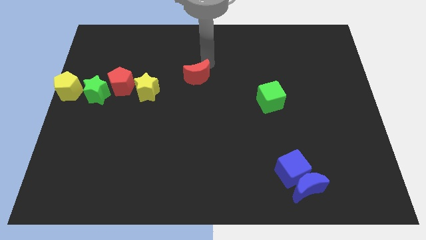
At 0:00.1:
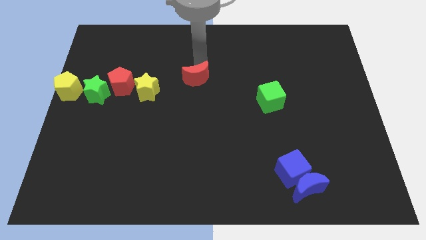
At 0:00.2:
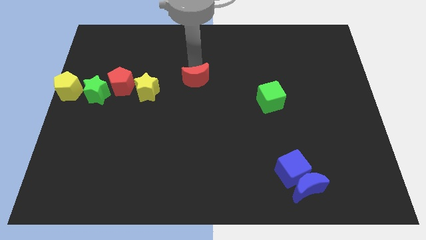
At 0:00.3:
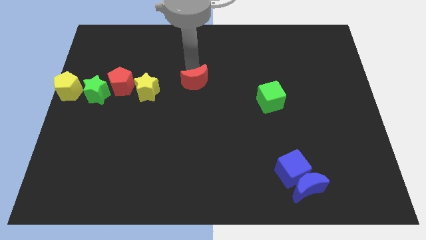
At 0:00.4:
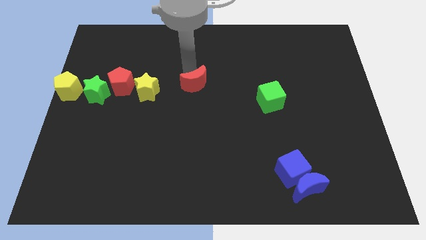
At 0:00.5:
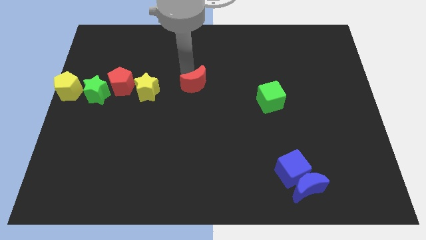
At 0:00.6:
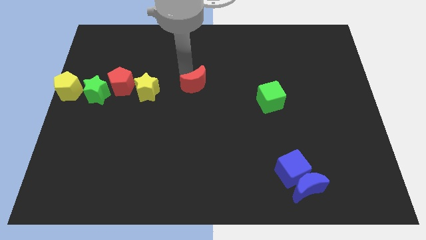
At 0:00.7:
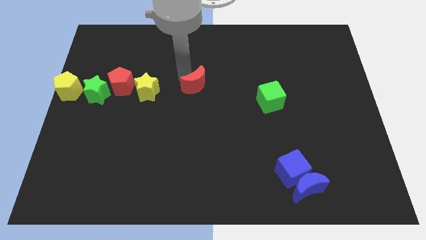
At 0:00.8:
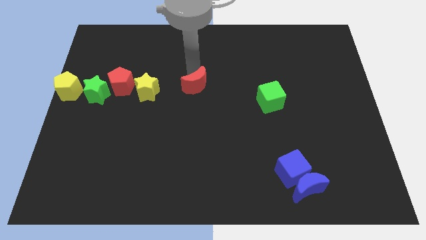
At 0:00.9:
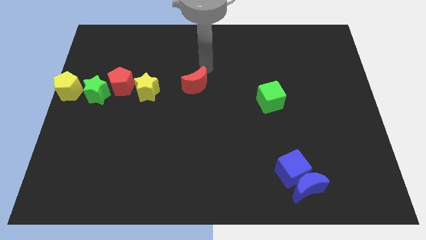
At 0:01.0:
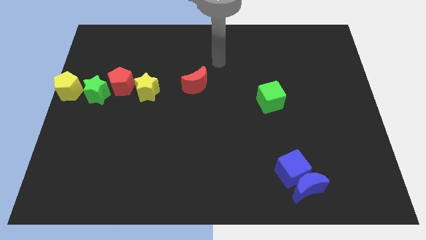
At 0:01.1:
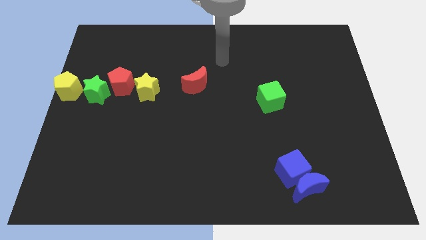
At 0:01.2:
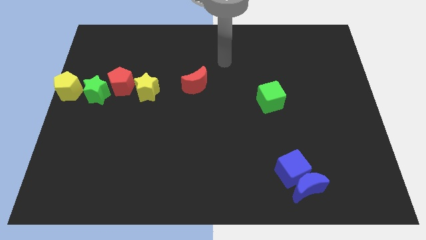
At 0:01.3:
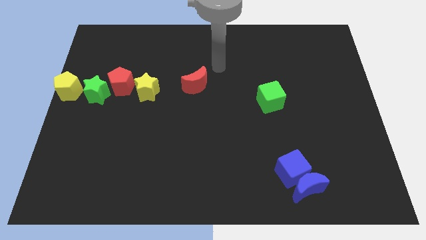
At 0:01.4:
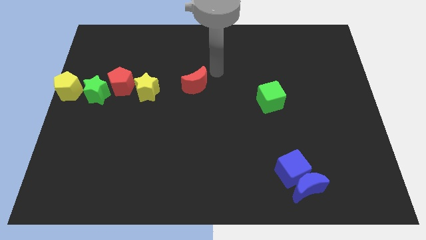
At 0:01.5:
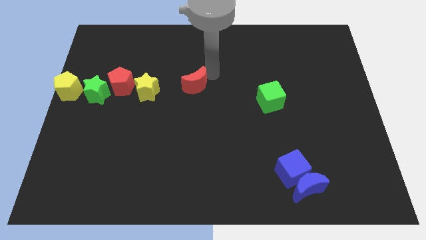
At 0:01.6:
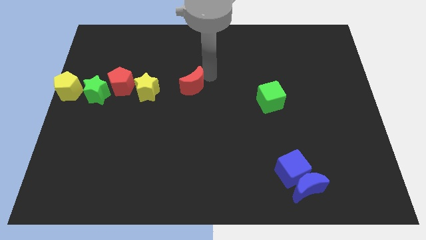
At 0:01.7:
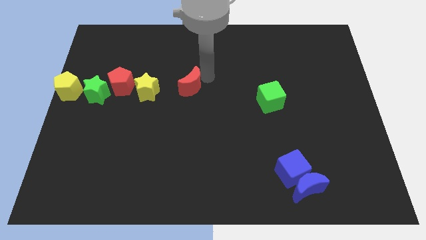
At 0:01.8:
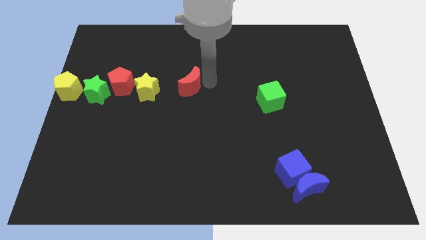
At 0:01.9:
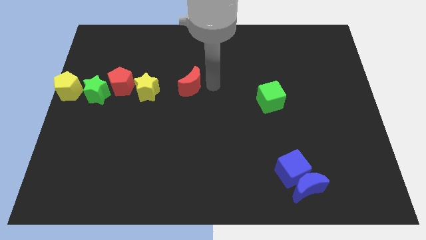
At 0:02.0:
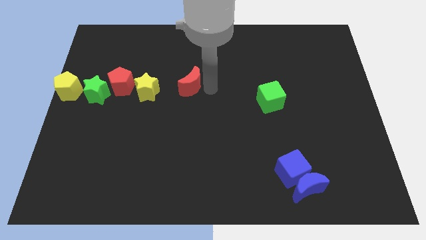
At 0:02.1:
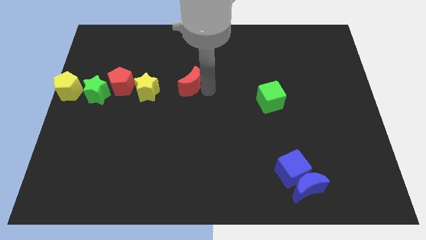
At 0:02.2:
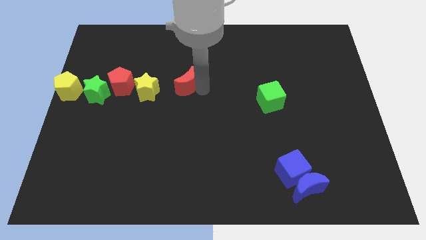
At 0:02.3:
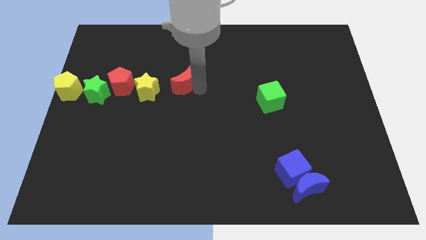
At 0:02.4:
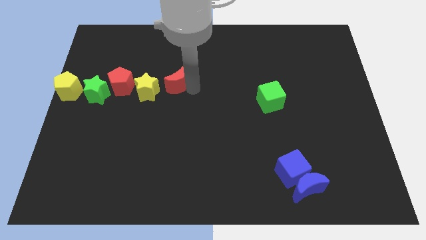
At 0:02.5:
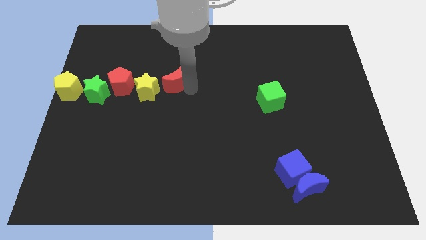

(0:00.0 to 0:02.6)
move the red crescent to the right of the yellow star

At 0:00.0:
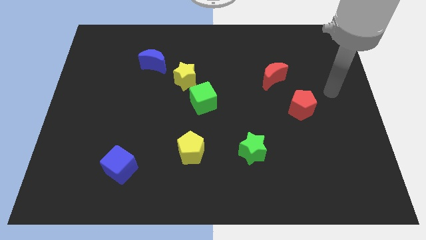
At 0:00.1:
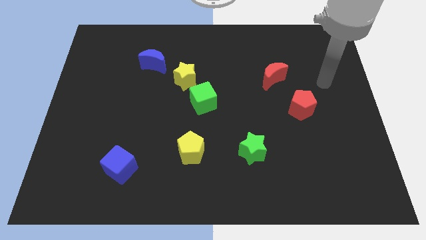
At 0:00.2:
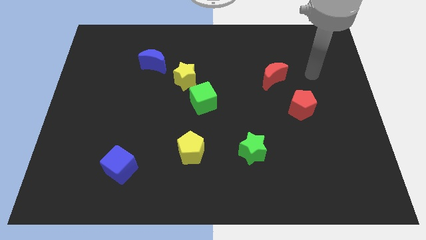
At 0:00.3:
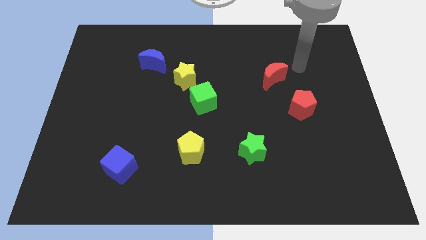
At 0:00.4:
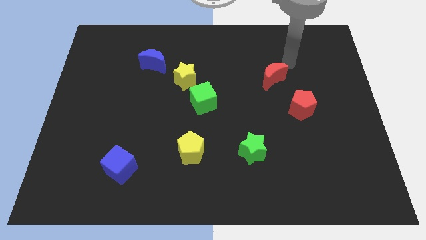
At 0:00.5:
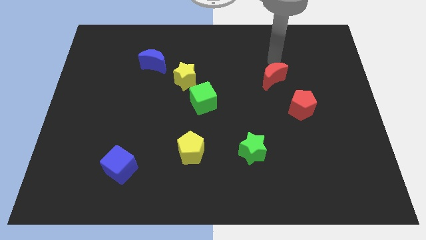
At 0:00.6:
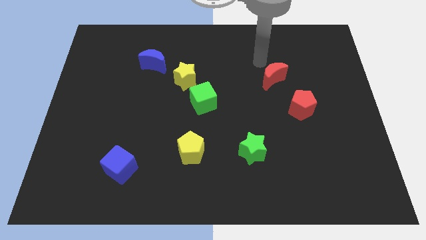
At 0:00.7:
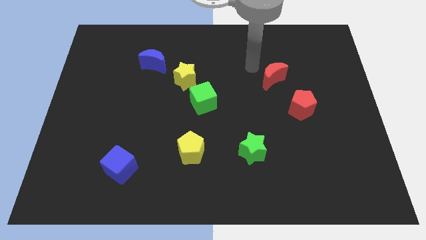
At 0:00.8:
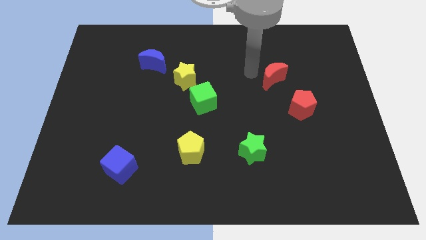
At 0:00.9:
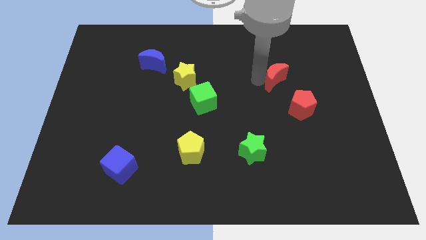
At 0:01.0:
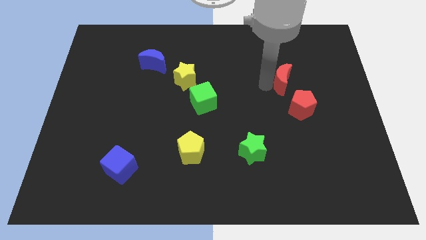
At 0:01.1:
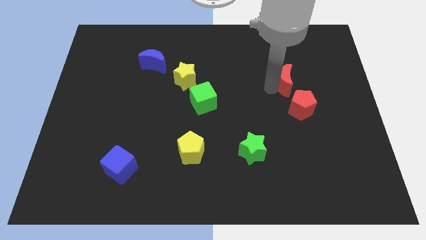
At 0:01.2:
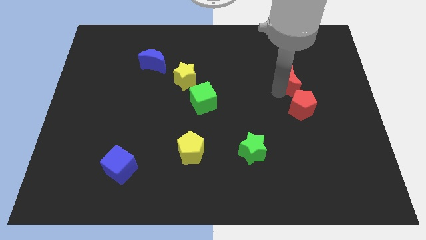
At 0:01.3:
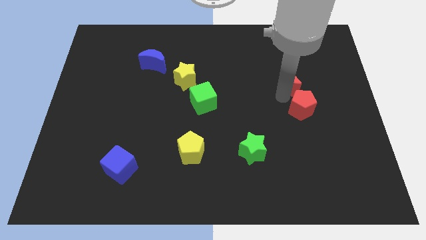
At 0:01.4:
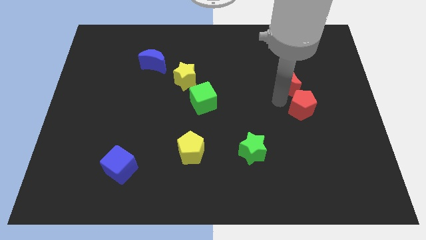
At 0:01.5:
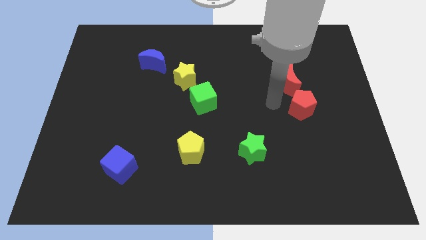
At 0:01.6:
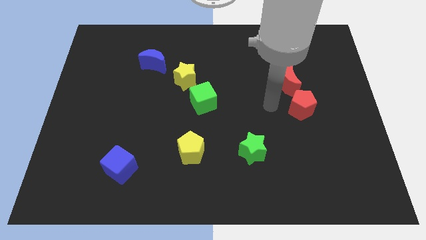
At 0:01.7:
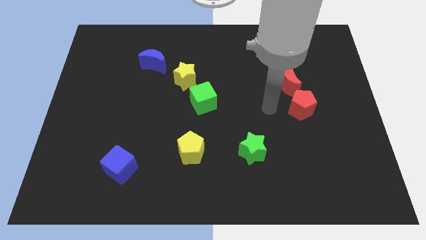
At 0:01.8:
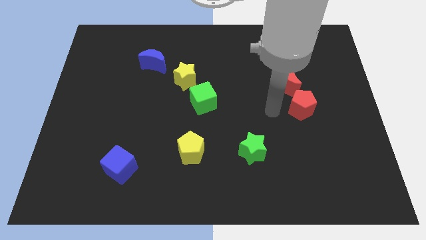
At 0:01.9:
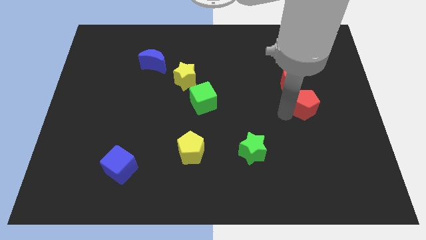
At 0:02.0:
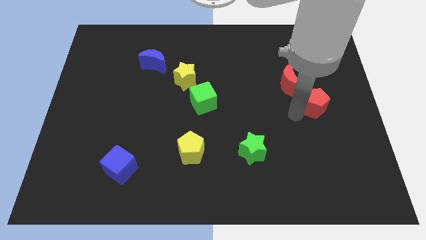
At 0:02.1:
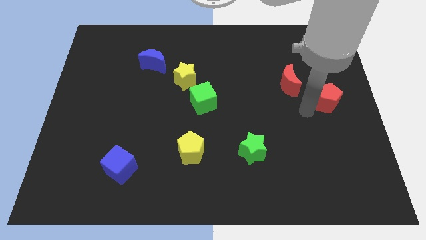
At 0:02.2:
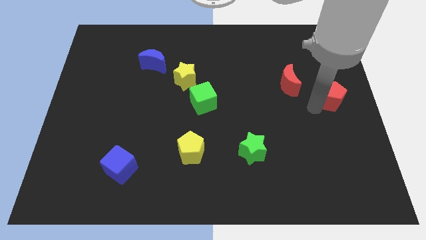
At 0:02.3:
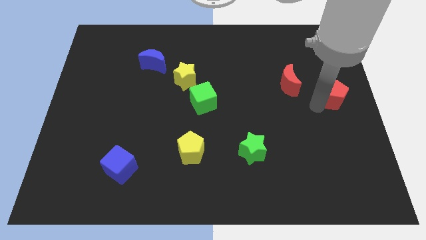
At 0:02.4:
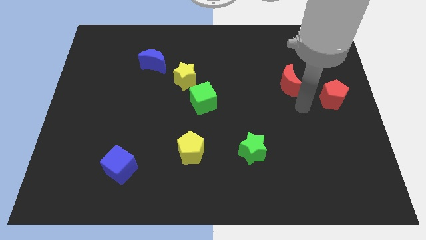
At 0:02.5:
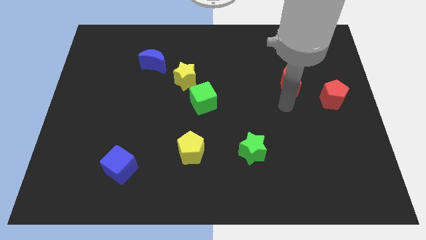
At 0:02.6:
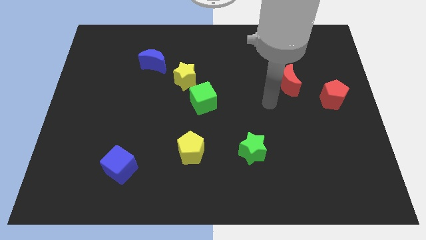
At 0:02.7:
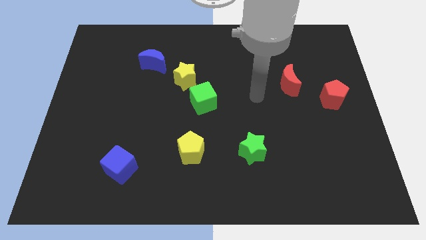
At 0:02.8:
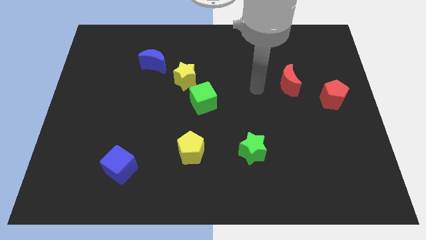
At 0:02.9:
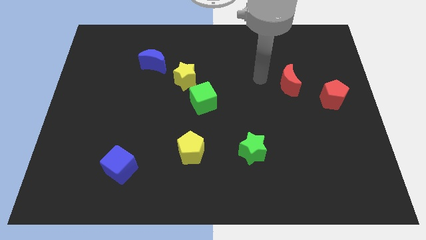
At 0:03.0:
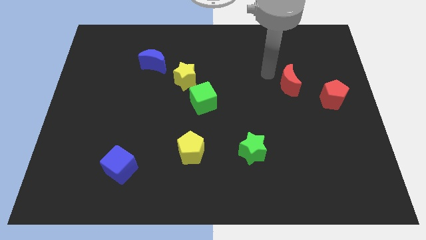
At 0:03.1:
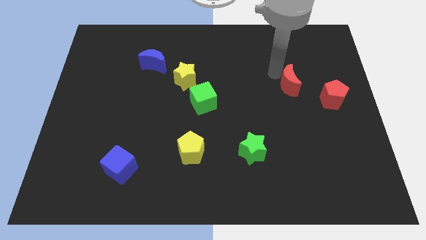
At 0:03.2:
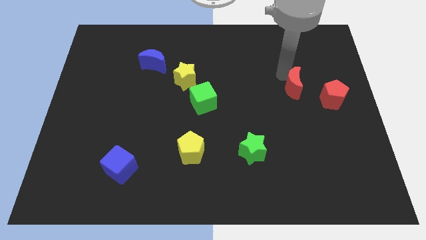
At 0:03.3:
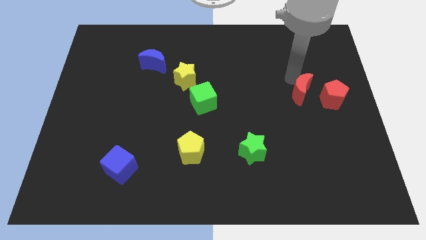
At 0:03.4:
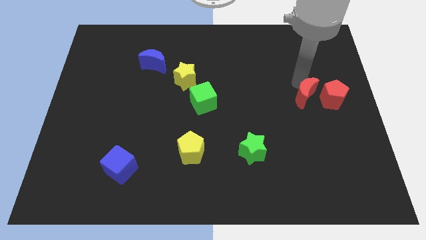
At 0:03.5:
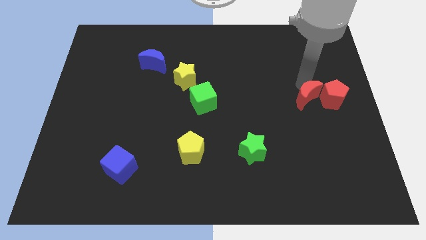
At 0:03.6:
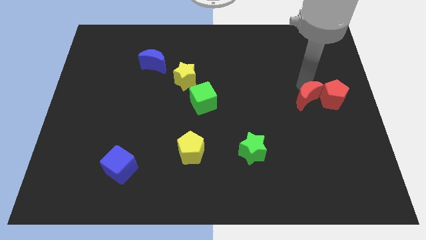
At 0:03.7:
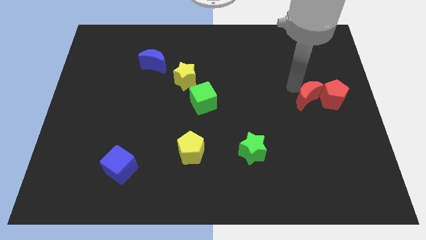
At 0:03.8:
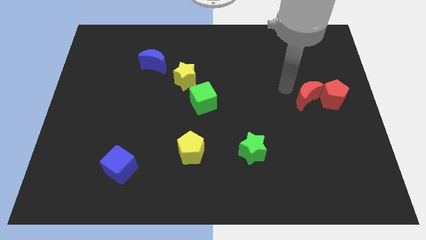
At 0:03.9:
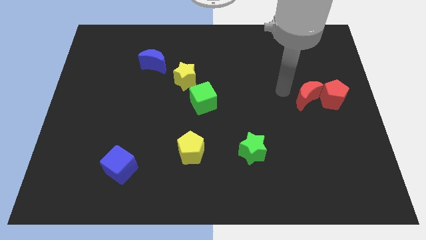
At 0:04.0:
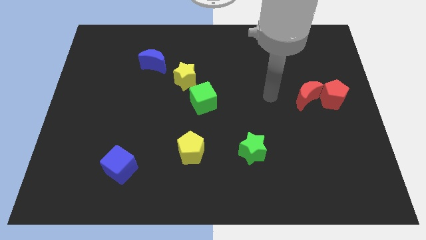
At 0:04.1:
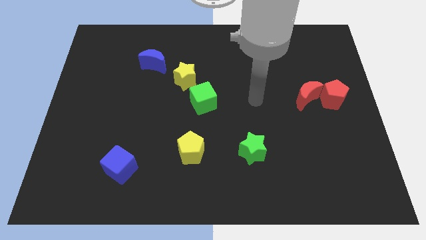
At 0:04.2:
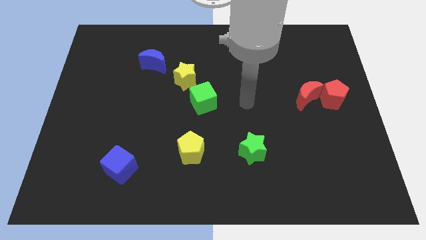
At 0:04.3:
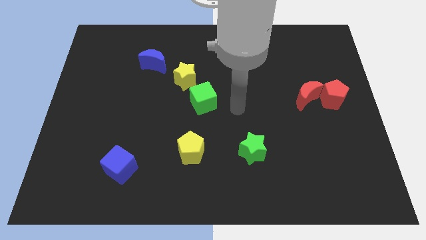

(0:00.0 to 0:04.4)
place the red blocks together at the center right

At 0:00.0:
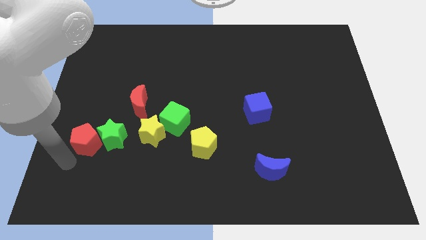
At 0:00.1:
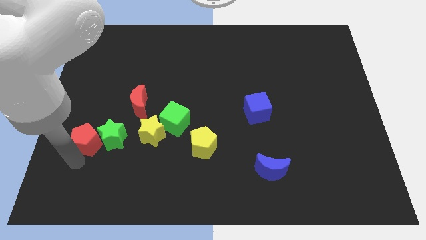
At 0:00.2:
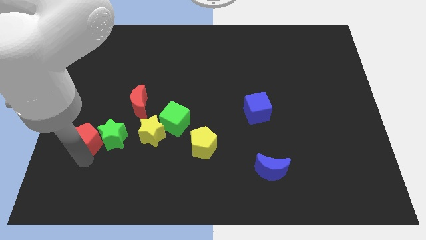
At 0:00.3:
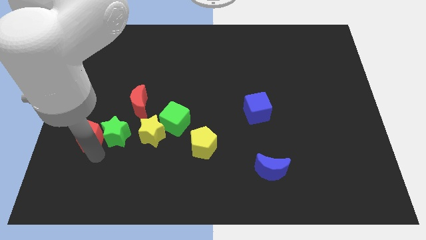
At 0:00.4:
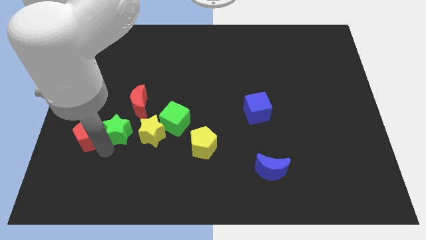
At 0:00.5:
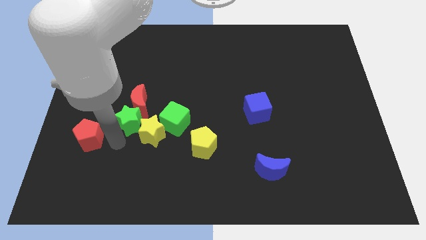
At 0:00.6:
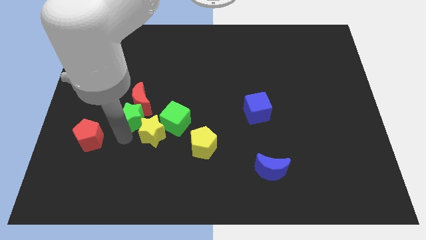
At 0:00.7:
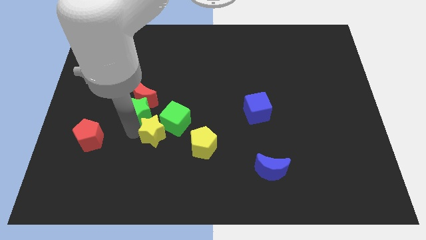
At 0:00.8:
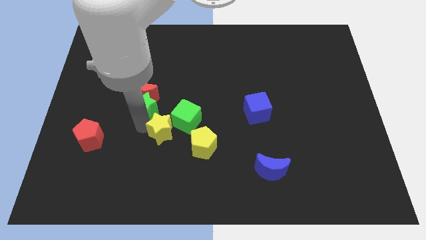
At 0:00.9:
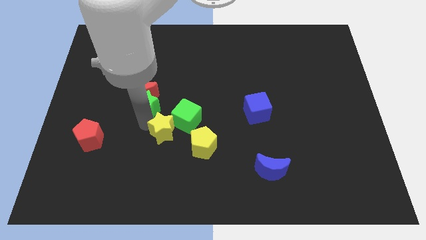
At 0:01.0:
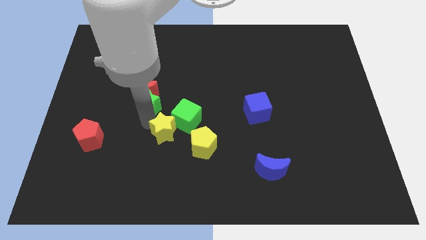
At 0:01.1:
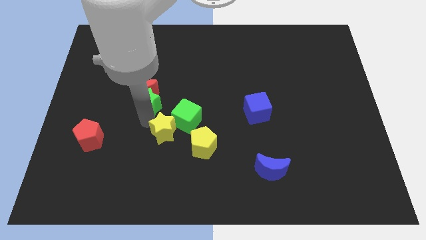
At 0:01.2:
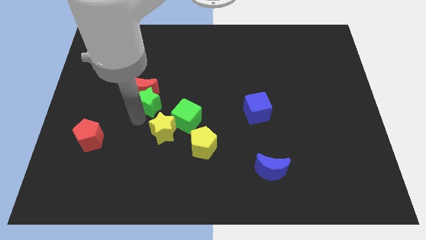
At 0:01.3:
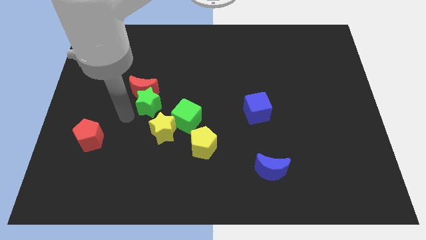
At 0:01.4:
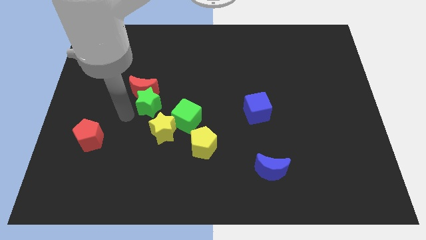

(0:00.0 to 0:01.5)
push the green star into the red crescent

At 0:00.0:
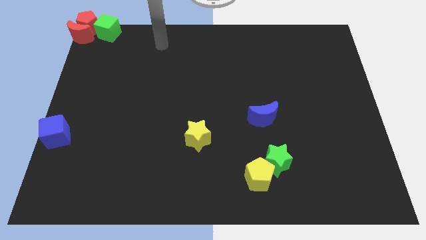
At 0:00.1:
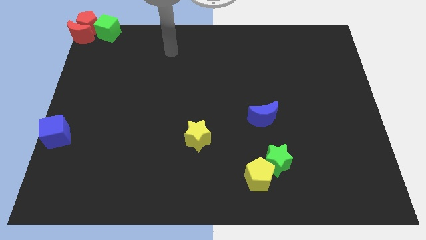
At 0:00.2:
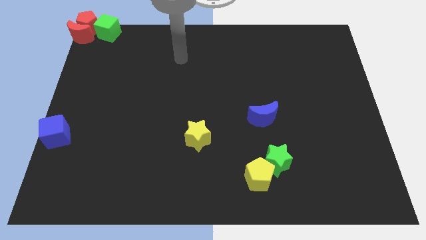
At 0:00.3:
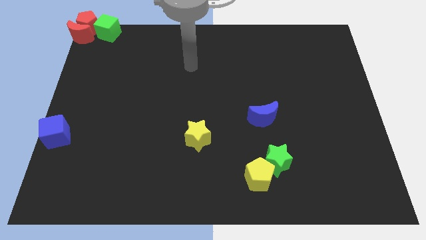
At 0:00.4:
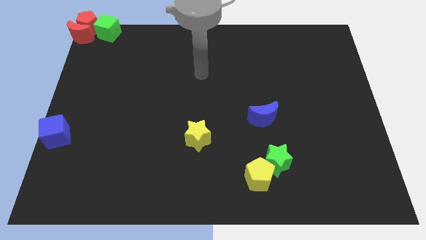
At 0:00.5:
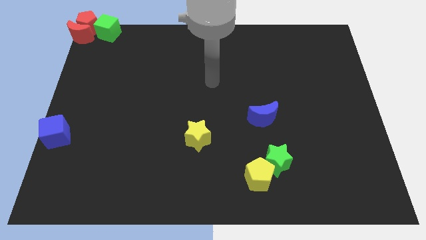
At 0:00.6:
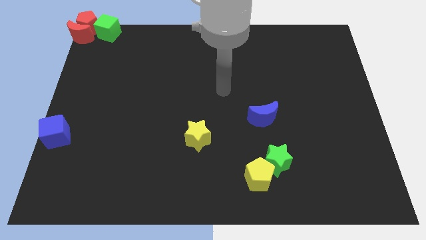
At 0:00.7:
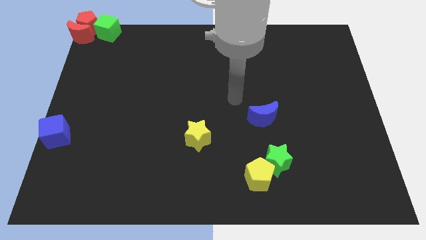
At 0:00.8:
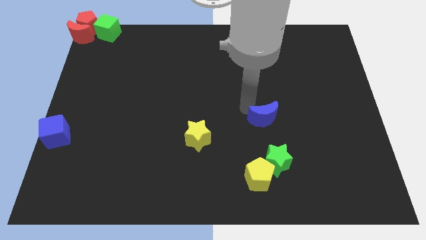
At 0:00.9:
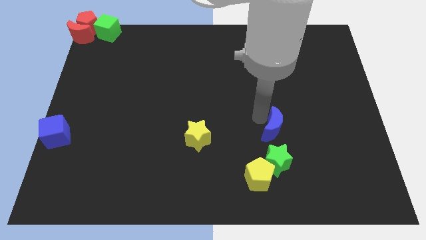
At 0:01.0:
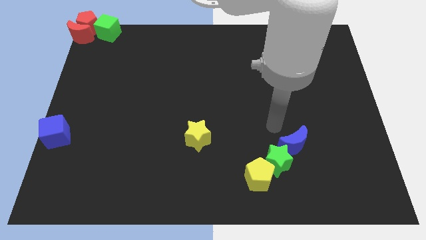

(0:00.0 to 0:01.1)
place blue moon above green star
